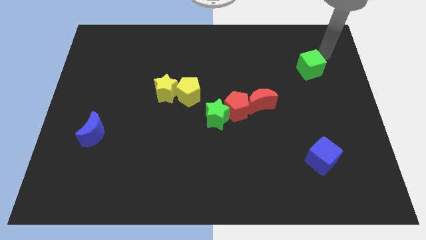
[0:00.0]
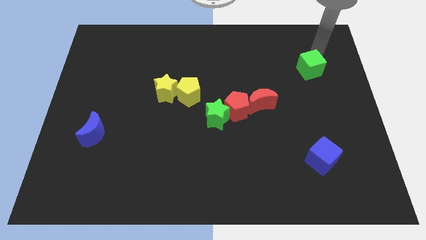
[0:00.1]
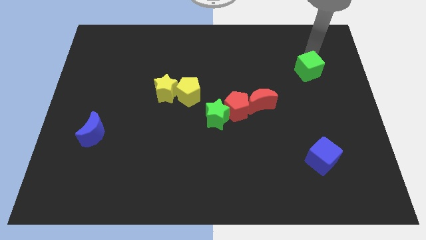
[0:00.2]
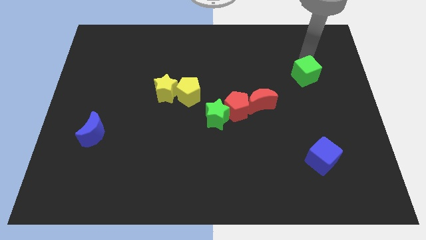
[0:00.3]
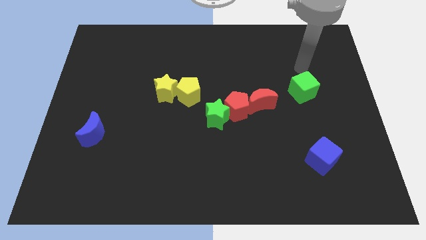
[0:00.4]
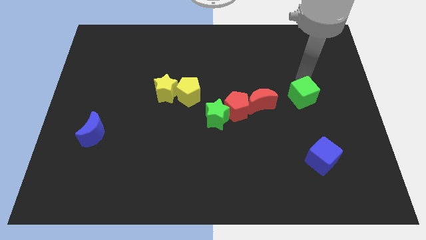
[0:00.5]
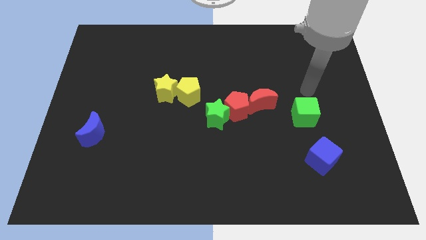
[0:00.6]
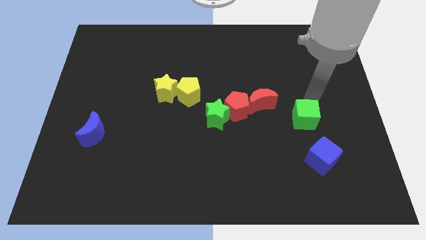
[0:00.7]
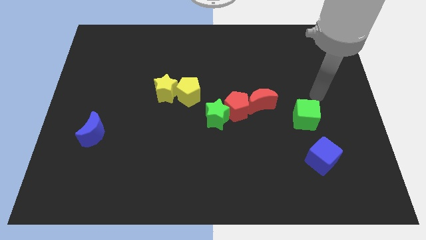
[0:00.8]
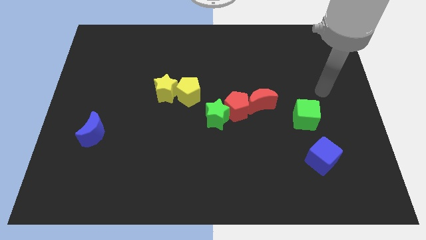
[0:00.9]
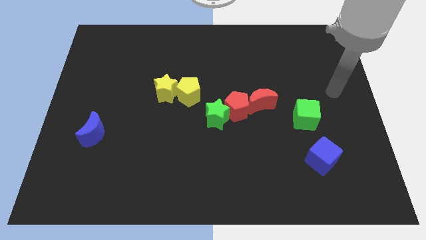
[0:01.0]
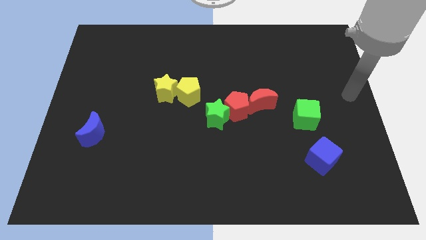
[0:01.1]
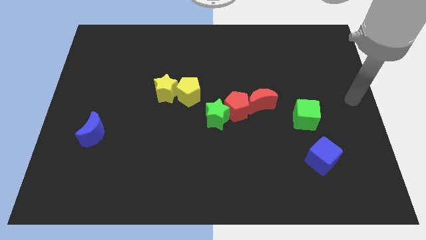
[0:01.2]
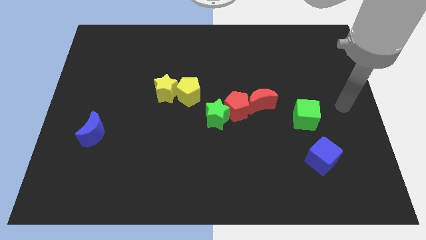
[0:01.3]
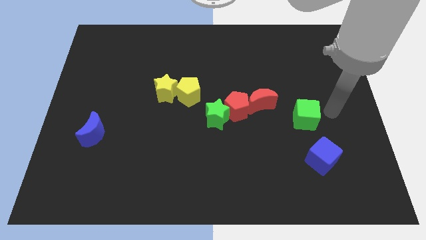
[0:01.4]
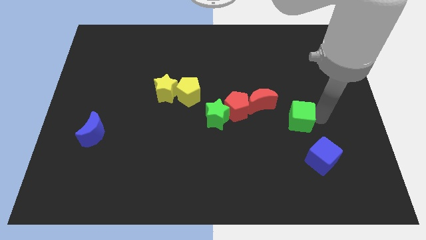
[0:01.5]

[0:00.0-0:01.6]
push the green cube close to the blue cube

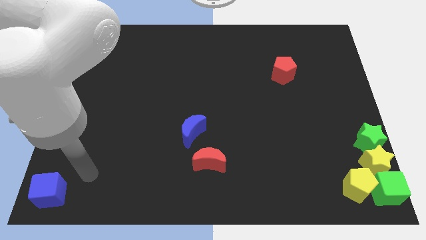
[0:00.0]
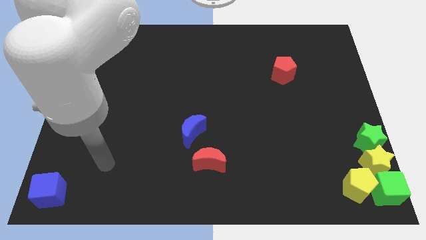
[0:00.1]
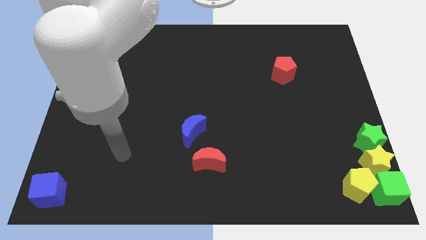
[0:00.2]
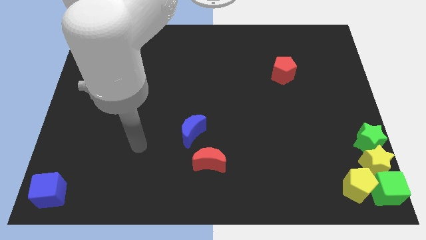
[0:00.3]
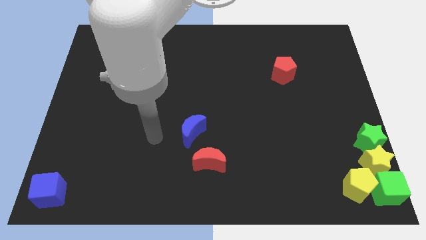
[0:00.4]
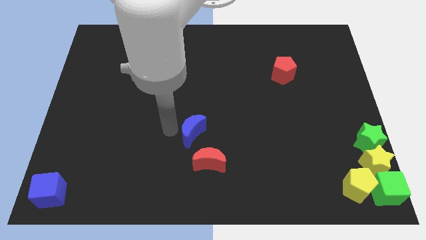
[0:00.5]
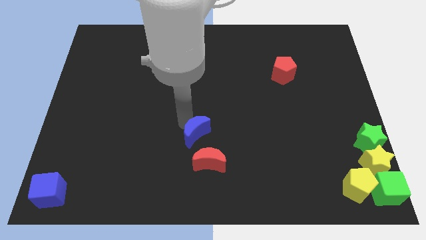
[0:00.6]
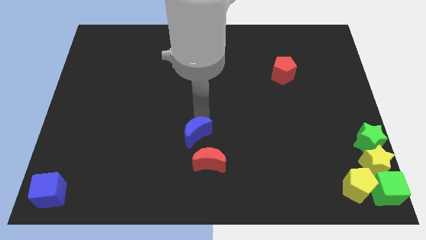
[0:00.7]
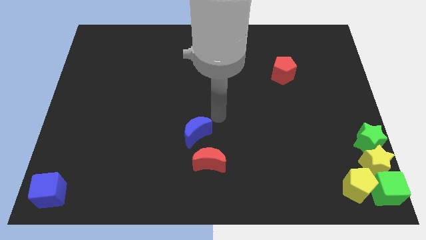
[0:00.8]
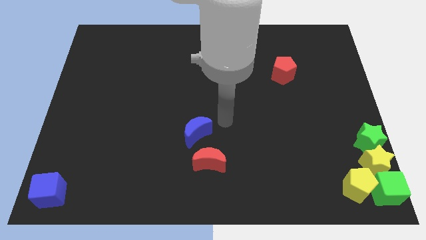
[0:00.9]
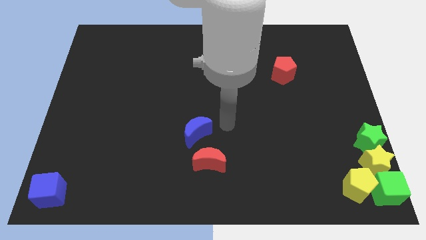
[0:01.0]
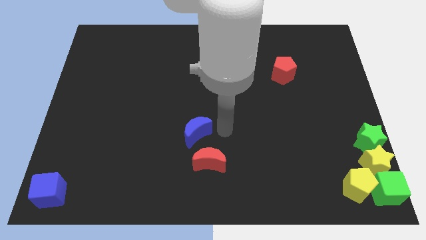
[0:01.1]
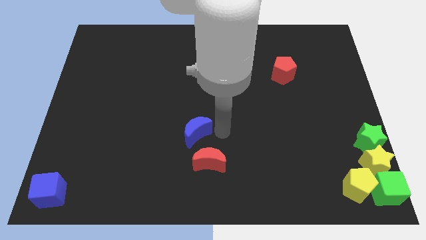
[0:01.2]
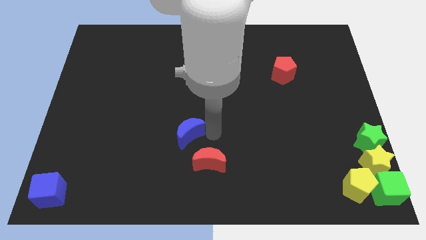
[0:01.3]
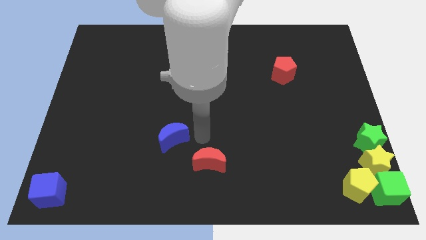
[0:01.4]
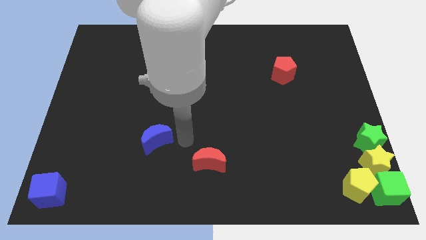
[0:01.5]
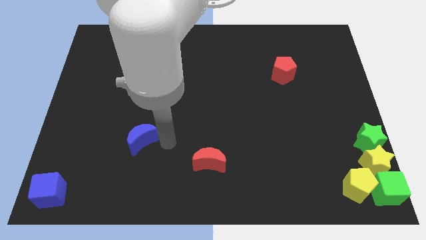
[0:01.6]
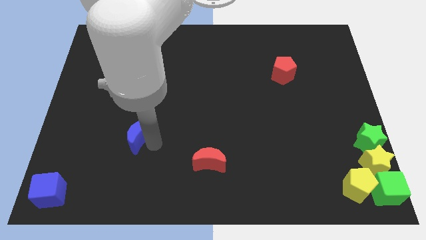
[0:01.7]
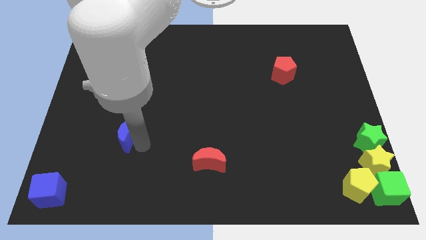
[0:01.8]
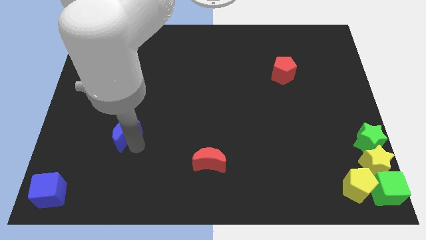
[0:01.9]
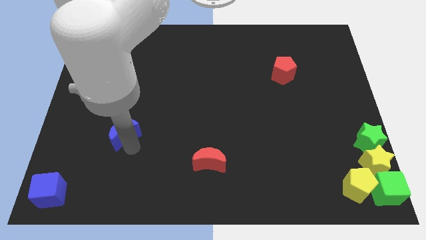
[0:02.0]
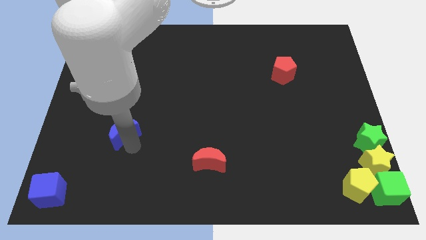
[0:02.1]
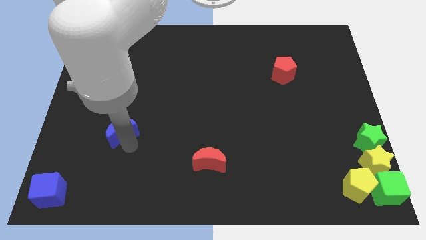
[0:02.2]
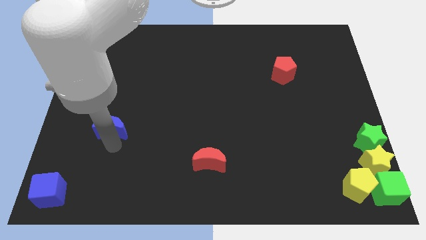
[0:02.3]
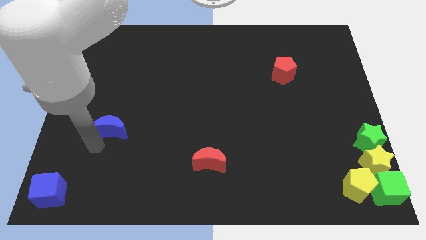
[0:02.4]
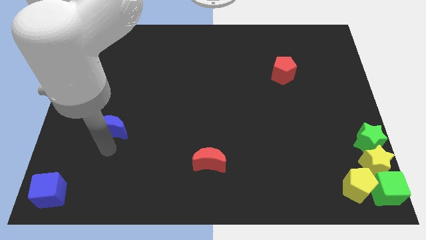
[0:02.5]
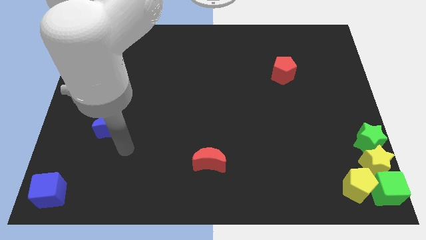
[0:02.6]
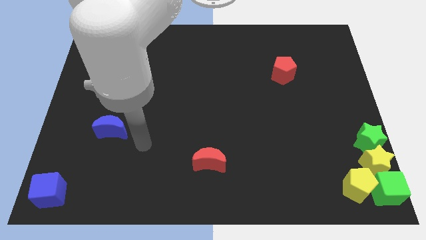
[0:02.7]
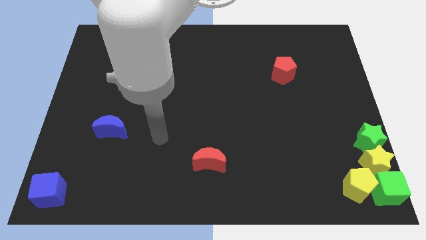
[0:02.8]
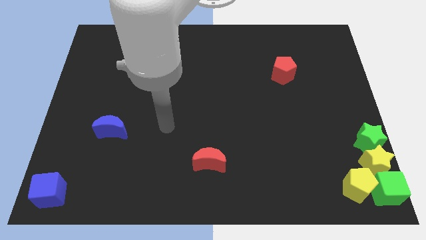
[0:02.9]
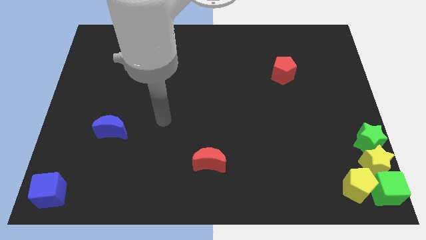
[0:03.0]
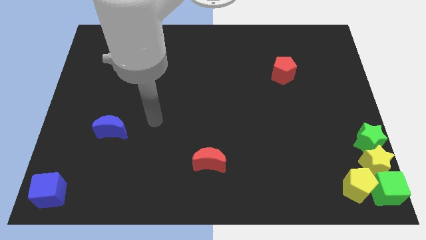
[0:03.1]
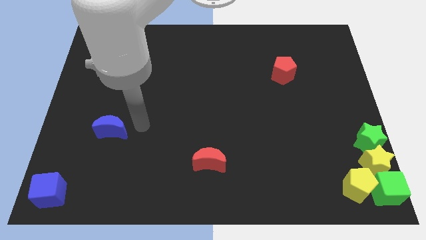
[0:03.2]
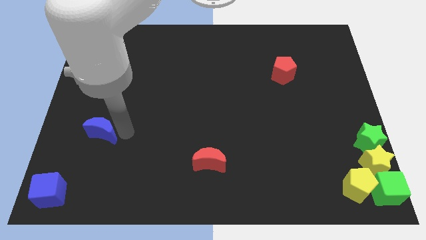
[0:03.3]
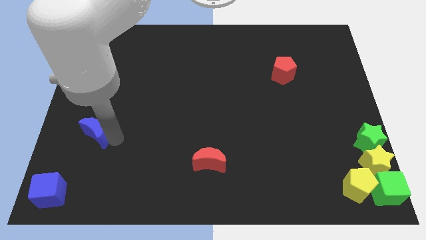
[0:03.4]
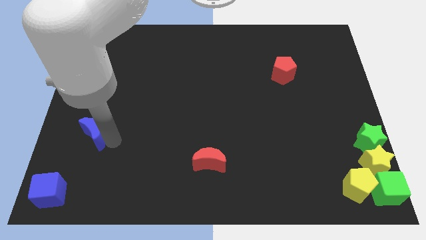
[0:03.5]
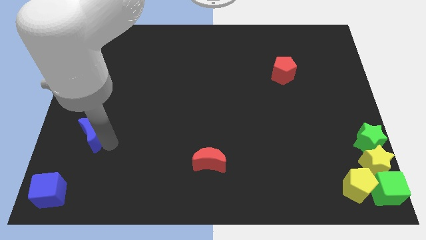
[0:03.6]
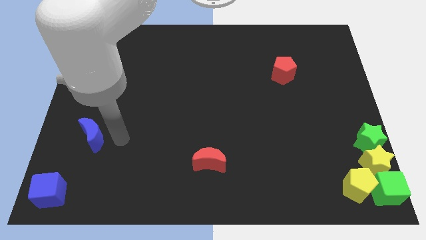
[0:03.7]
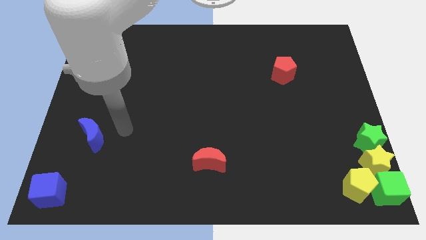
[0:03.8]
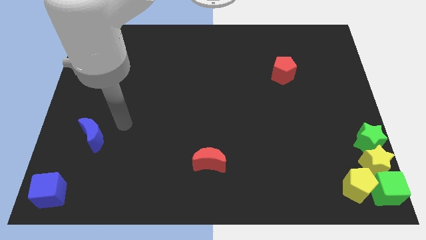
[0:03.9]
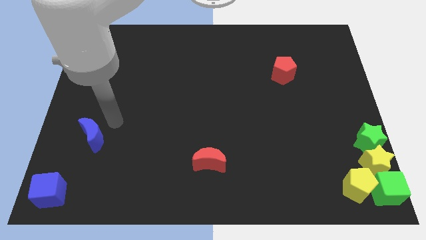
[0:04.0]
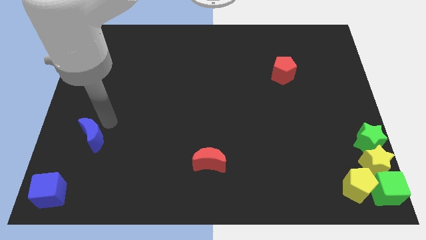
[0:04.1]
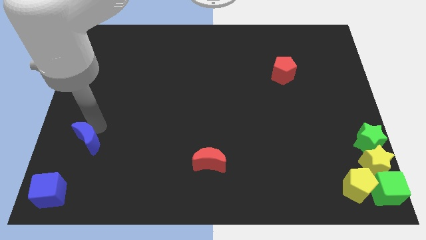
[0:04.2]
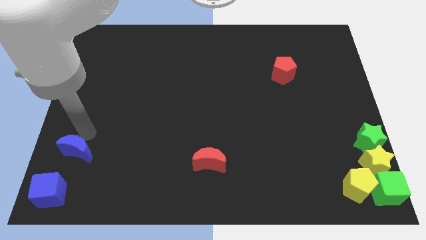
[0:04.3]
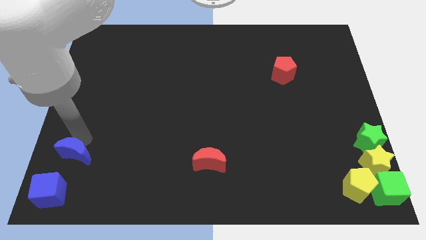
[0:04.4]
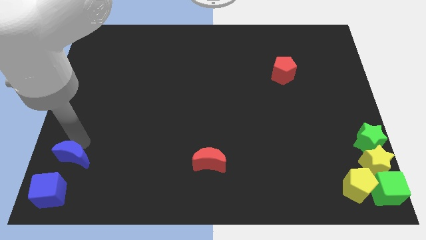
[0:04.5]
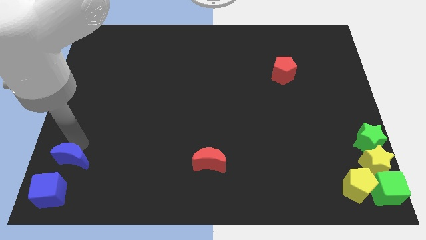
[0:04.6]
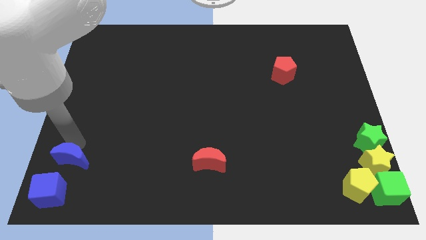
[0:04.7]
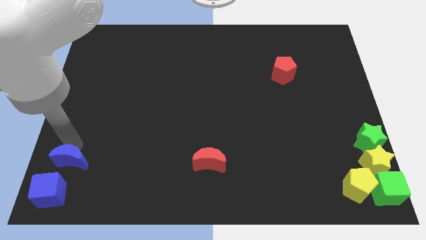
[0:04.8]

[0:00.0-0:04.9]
place the blue crescent above the blue cube

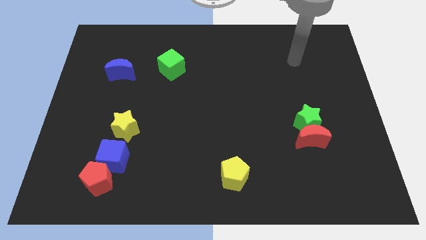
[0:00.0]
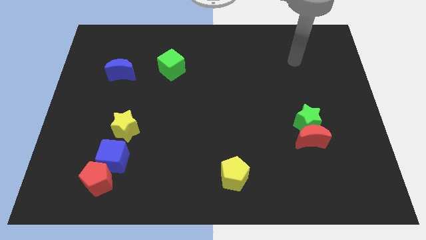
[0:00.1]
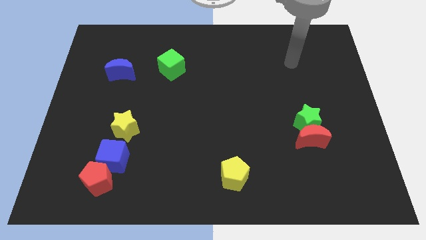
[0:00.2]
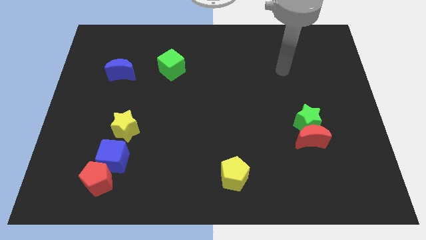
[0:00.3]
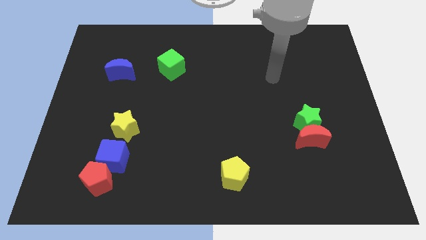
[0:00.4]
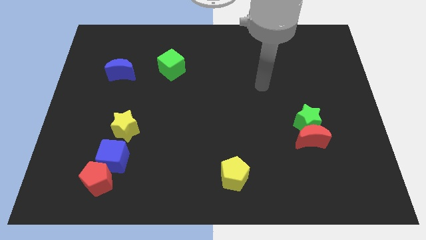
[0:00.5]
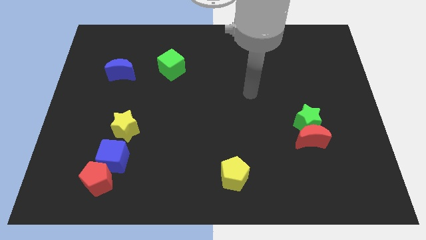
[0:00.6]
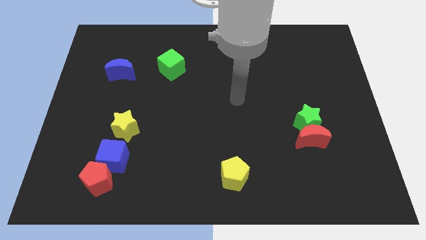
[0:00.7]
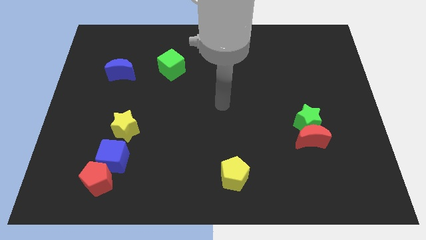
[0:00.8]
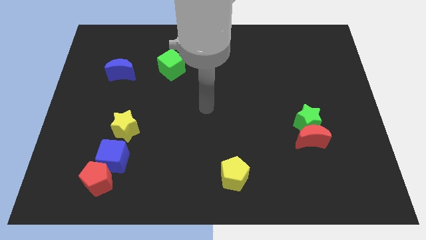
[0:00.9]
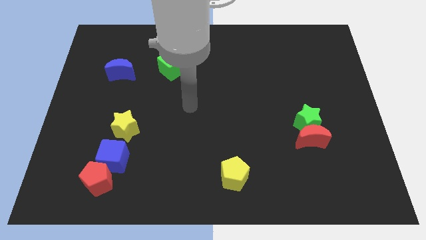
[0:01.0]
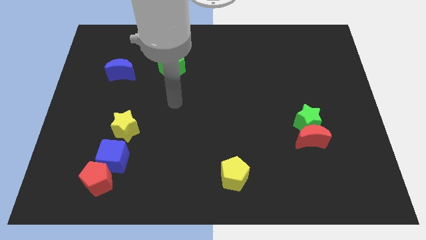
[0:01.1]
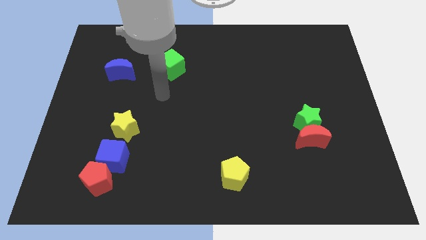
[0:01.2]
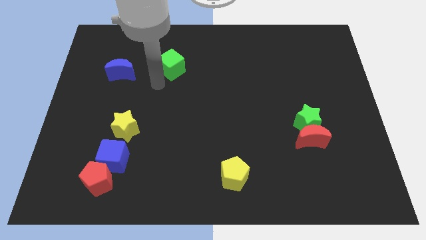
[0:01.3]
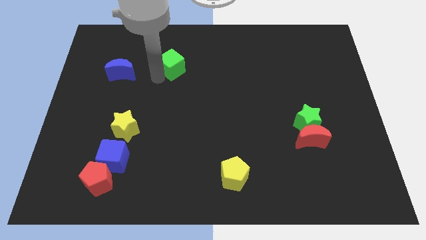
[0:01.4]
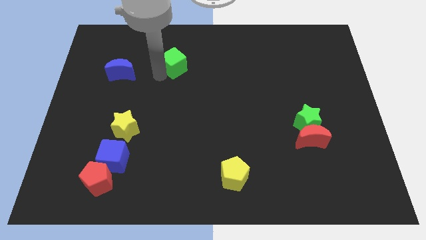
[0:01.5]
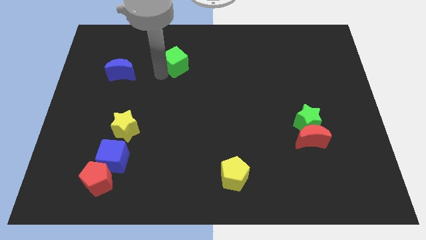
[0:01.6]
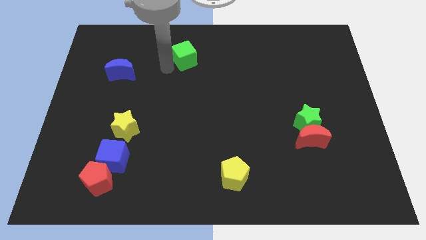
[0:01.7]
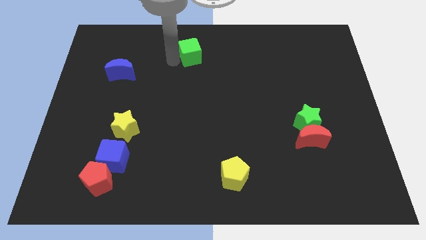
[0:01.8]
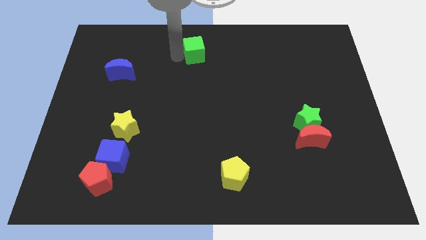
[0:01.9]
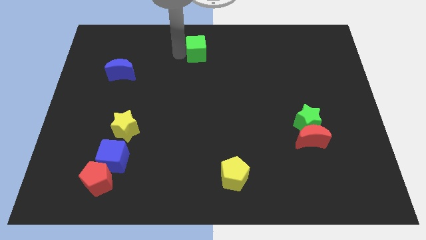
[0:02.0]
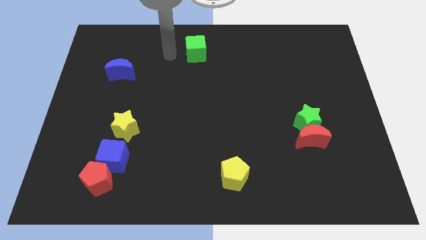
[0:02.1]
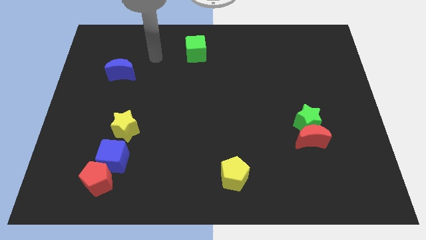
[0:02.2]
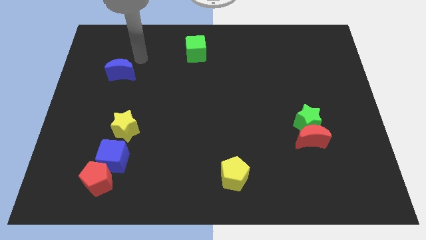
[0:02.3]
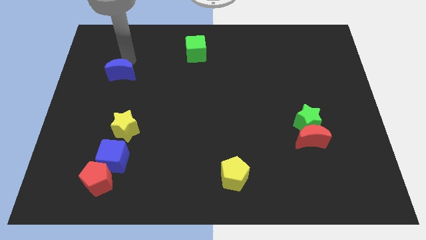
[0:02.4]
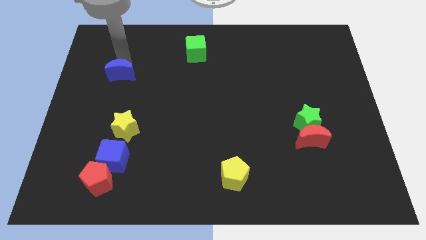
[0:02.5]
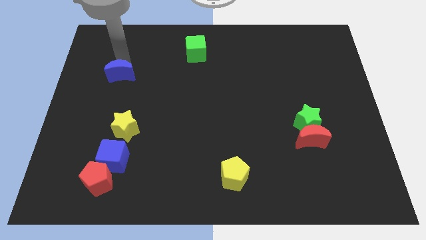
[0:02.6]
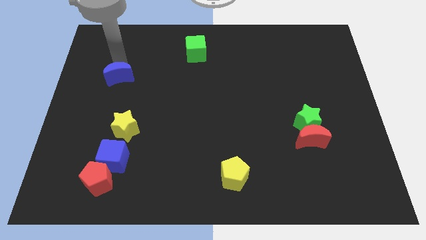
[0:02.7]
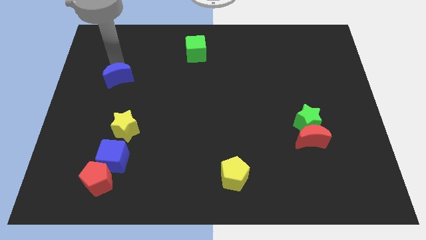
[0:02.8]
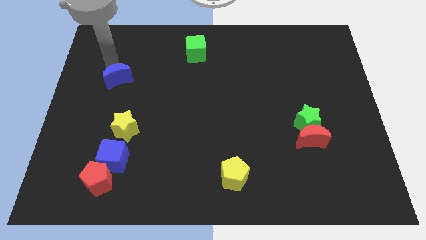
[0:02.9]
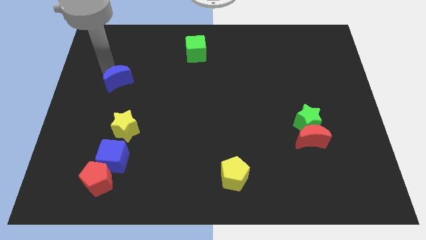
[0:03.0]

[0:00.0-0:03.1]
push the green cube upwards and blue moon downwards
